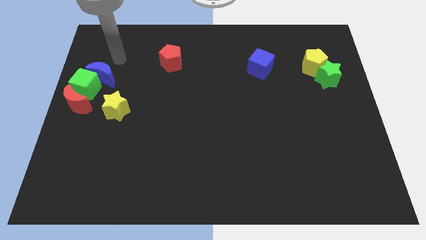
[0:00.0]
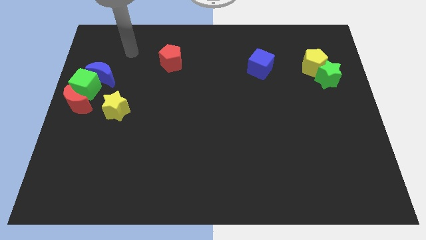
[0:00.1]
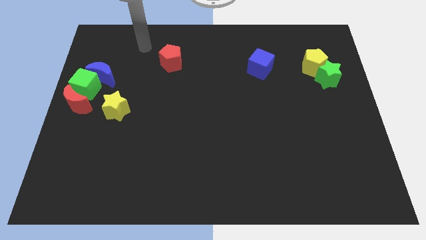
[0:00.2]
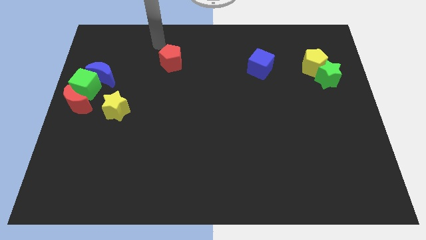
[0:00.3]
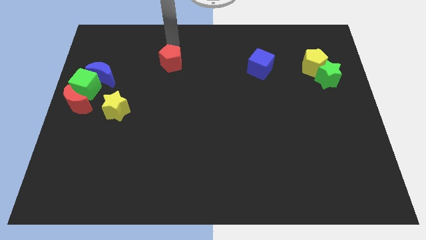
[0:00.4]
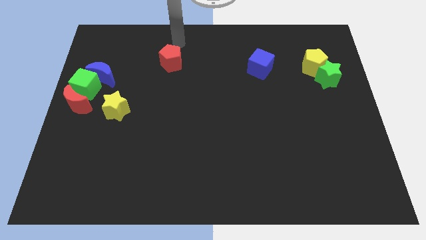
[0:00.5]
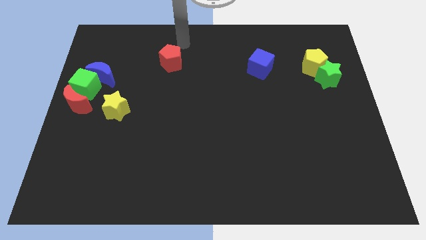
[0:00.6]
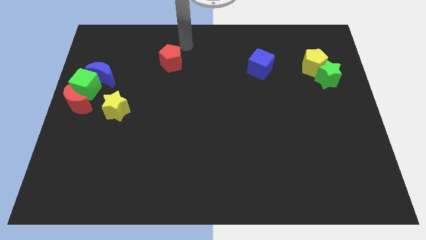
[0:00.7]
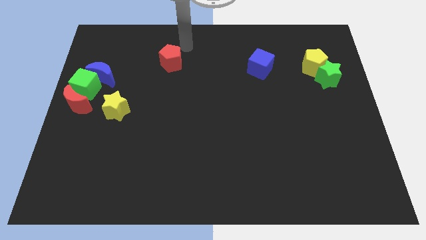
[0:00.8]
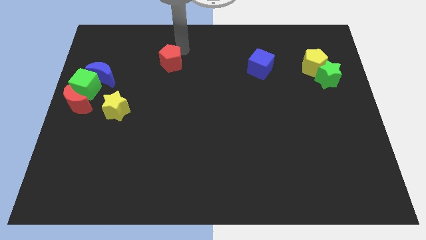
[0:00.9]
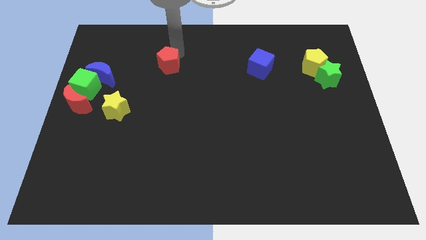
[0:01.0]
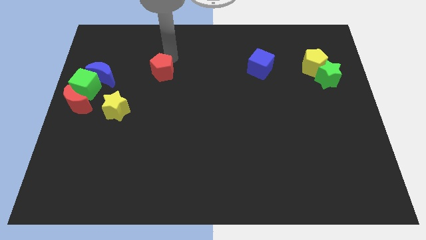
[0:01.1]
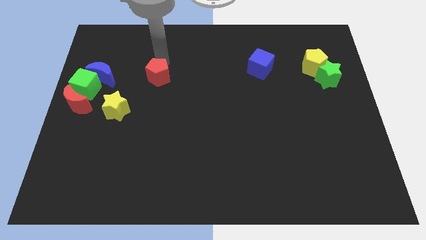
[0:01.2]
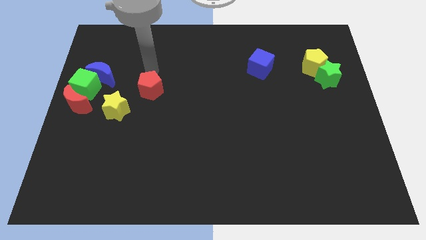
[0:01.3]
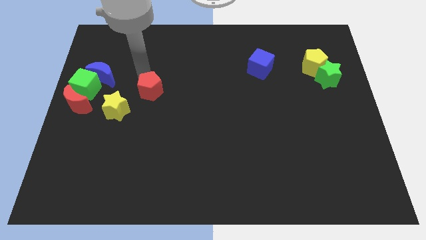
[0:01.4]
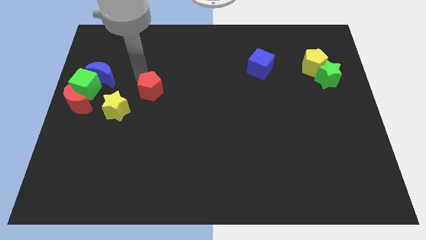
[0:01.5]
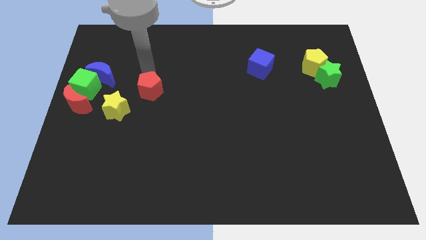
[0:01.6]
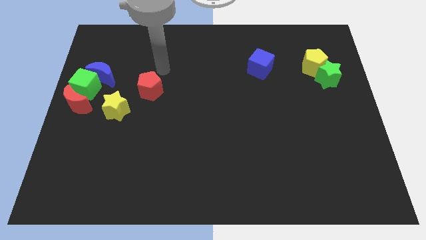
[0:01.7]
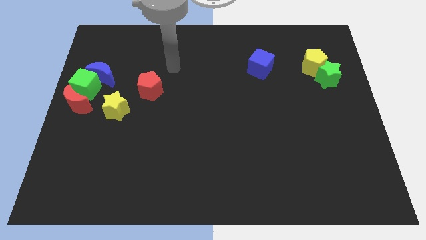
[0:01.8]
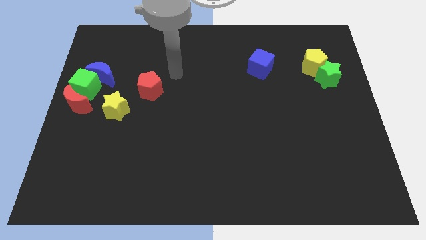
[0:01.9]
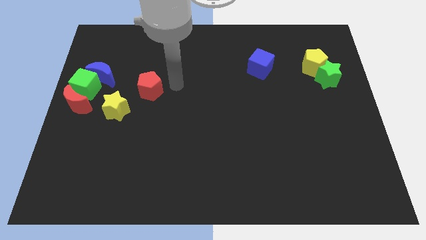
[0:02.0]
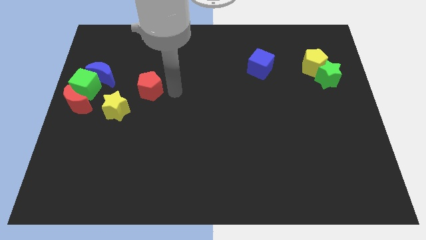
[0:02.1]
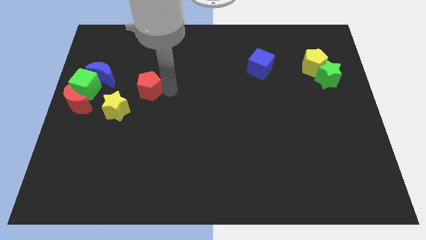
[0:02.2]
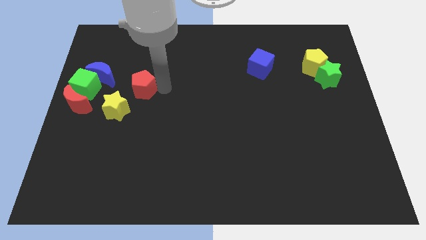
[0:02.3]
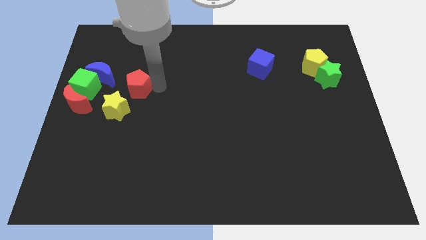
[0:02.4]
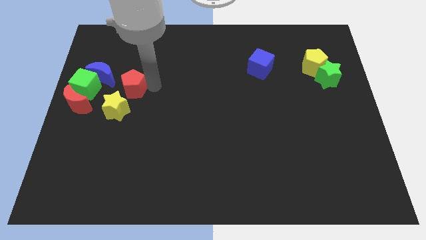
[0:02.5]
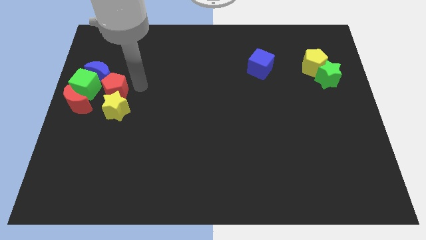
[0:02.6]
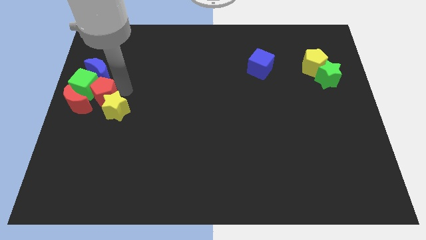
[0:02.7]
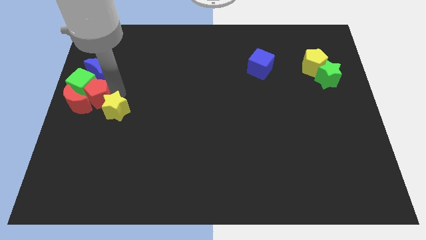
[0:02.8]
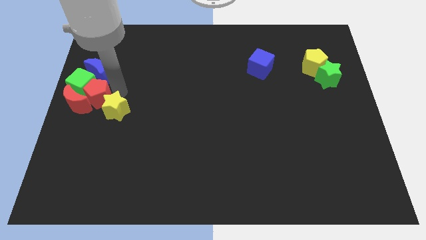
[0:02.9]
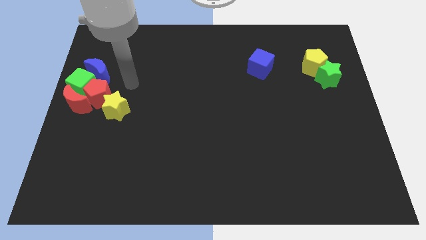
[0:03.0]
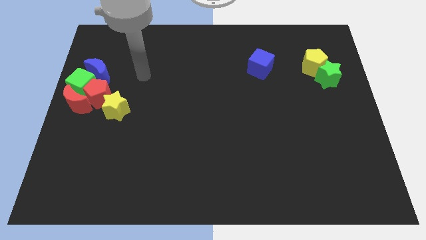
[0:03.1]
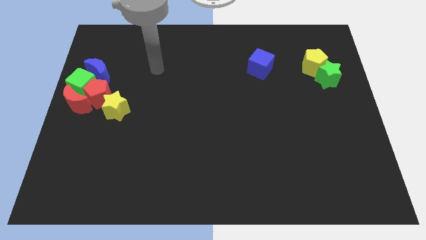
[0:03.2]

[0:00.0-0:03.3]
place the red pentagon at the top left side of yellow star

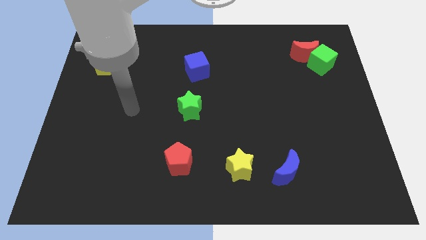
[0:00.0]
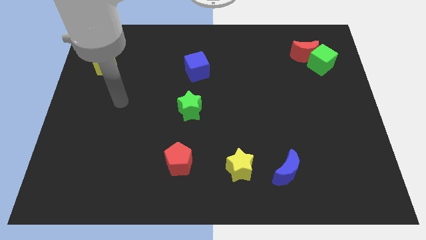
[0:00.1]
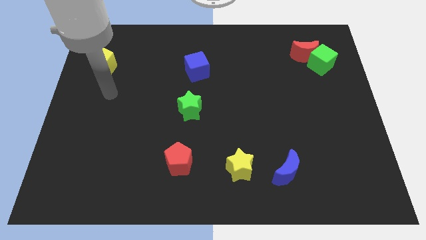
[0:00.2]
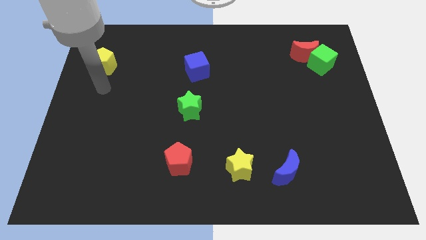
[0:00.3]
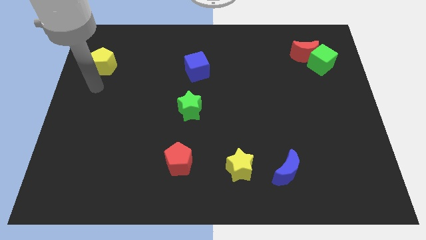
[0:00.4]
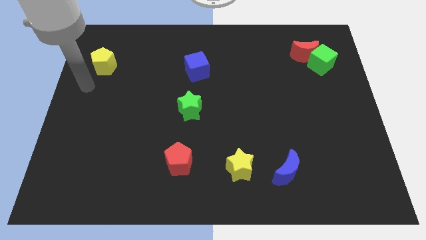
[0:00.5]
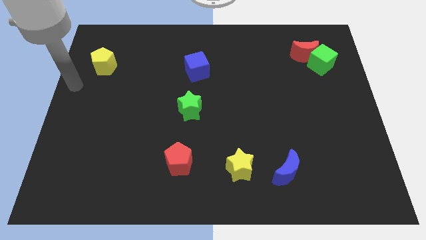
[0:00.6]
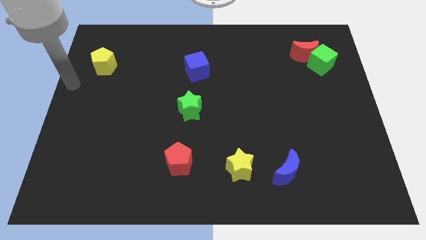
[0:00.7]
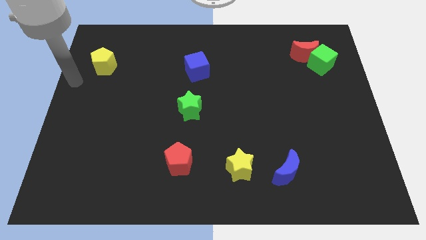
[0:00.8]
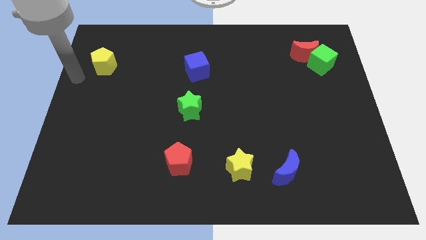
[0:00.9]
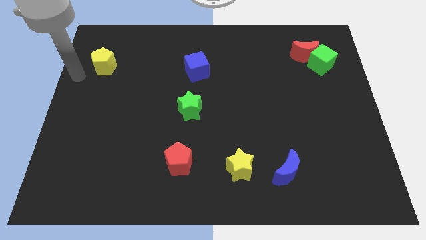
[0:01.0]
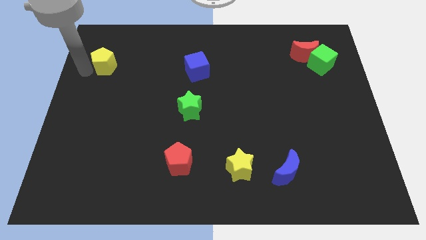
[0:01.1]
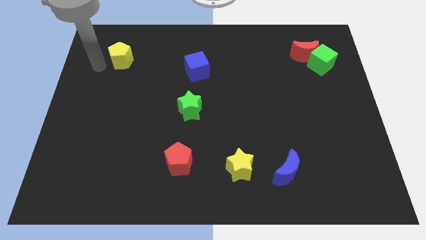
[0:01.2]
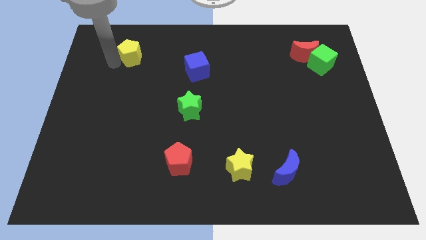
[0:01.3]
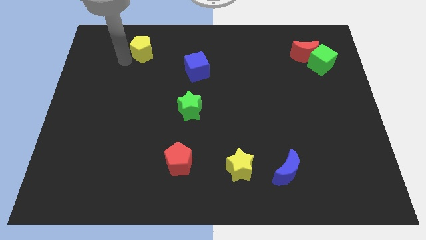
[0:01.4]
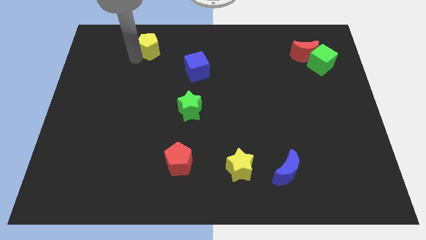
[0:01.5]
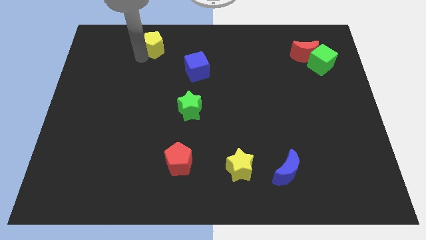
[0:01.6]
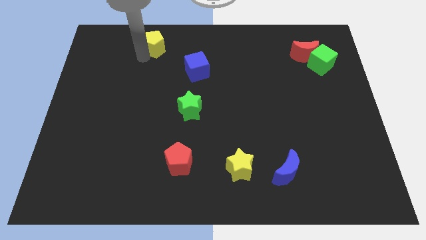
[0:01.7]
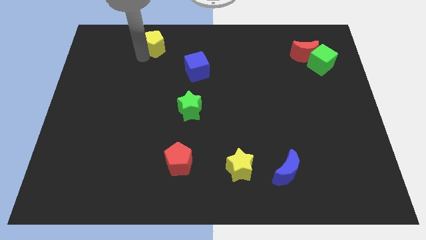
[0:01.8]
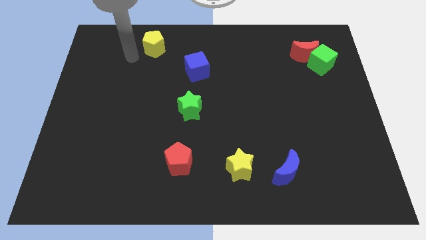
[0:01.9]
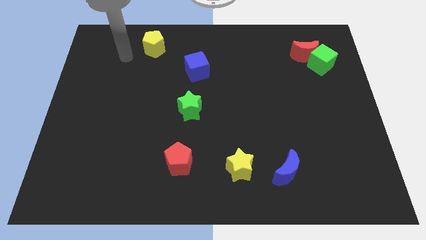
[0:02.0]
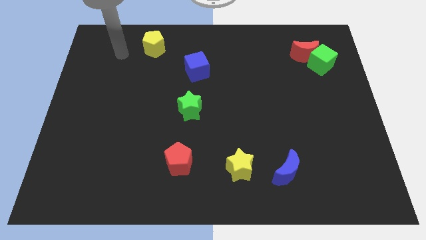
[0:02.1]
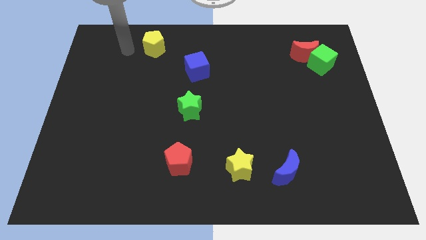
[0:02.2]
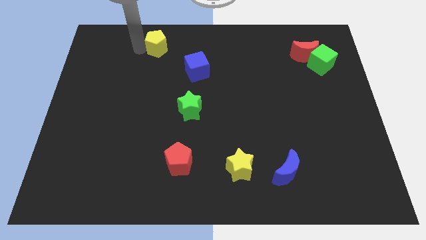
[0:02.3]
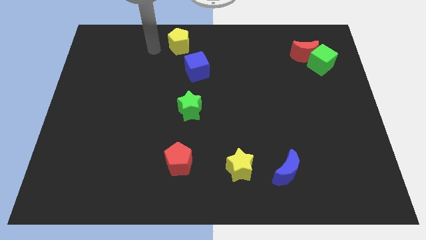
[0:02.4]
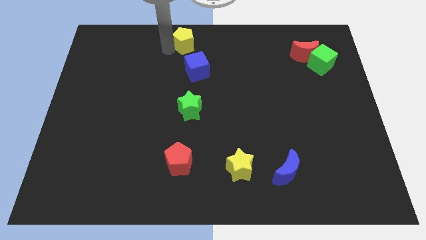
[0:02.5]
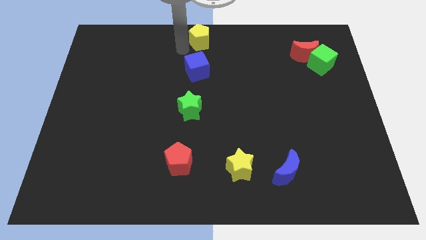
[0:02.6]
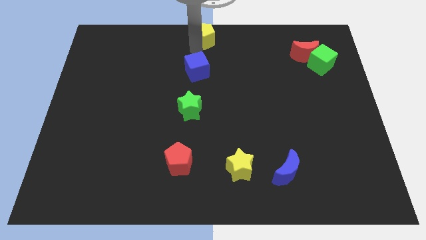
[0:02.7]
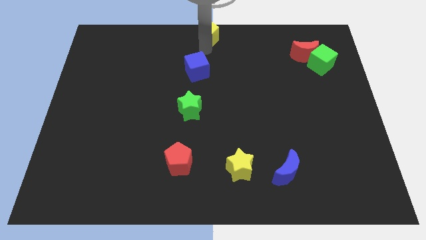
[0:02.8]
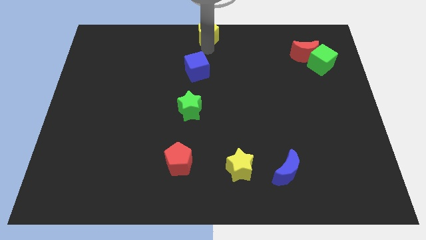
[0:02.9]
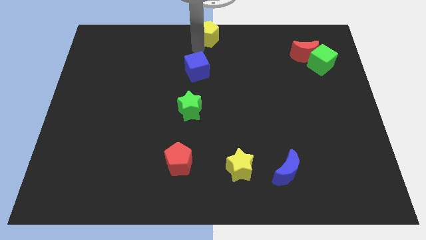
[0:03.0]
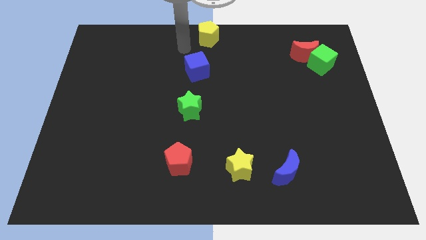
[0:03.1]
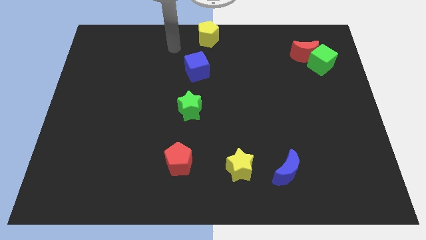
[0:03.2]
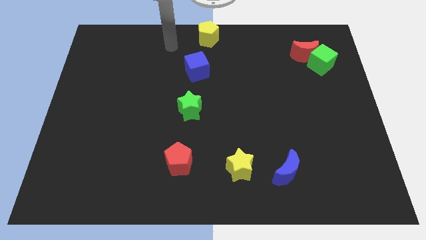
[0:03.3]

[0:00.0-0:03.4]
place the yellow pentagon above the blue cube

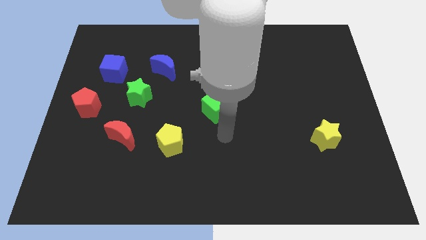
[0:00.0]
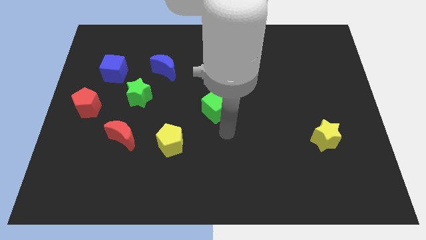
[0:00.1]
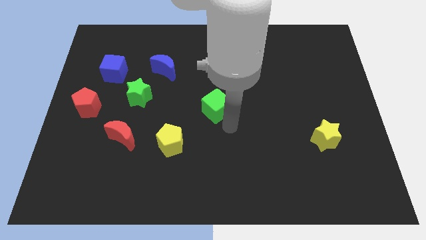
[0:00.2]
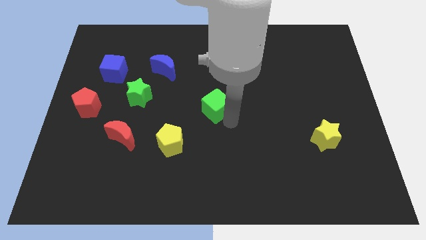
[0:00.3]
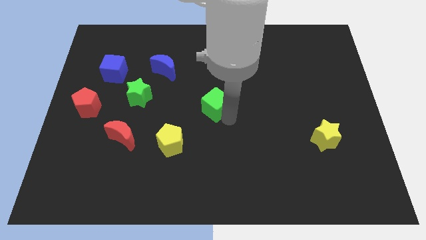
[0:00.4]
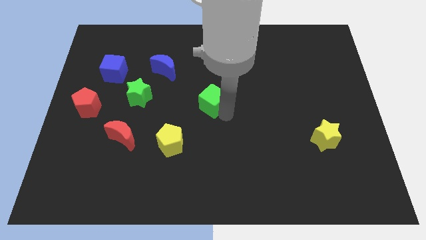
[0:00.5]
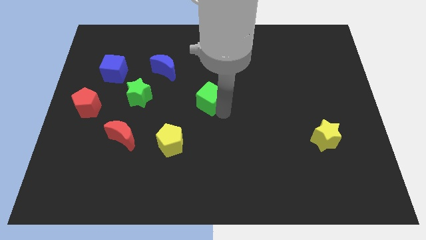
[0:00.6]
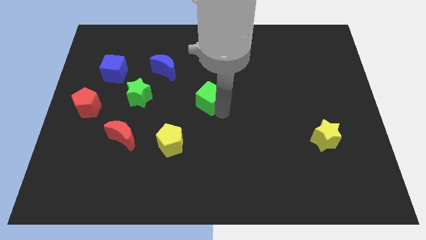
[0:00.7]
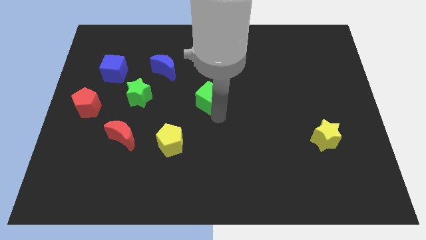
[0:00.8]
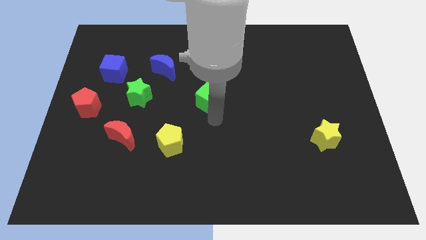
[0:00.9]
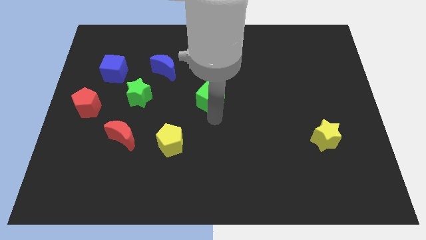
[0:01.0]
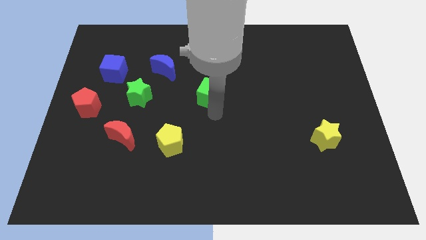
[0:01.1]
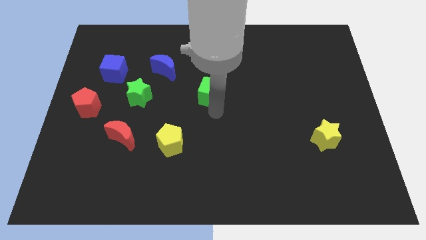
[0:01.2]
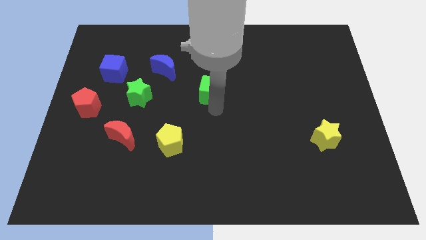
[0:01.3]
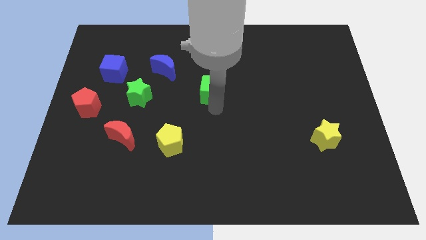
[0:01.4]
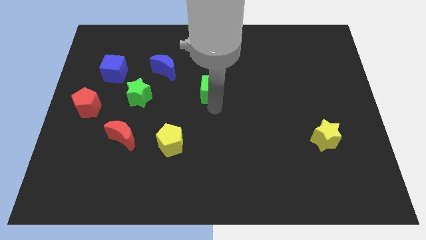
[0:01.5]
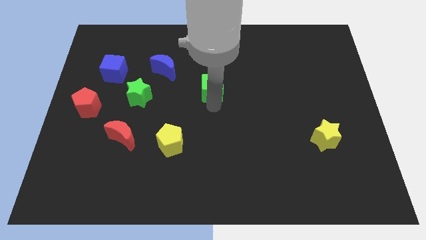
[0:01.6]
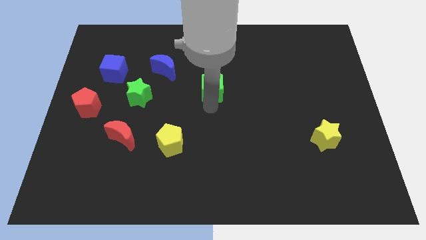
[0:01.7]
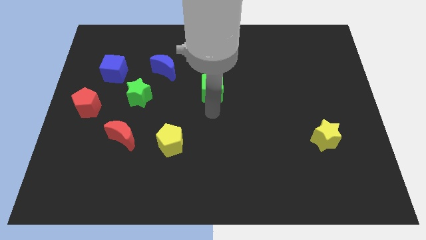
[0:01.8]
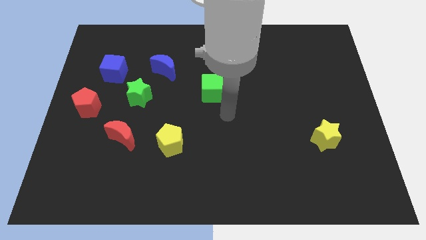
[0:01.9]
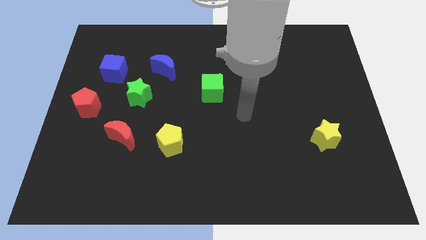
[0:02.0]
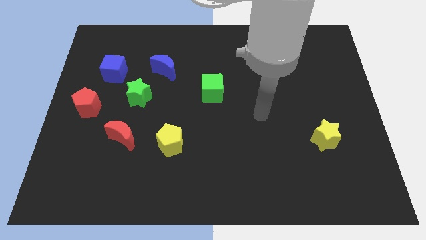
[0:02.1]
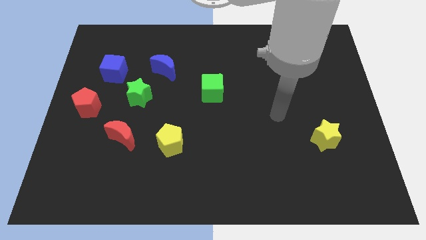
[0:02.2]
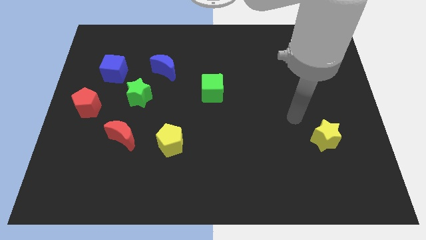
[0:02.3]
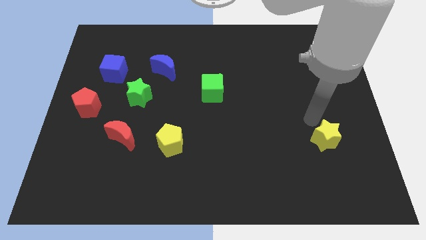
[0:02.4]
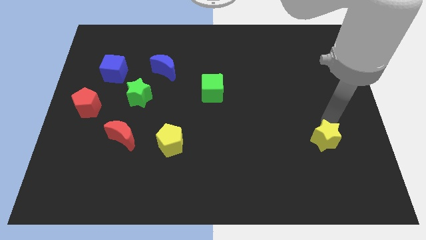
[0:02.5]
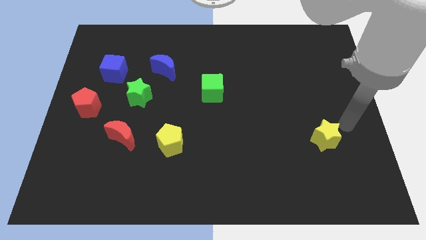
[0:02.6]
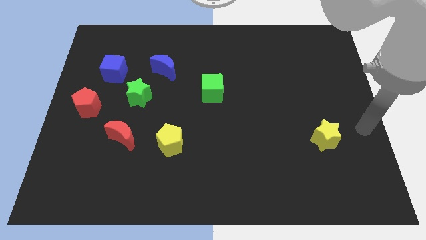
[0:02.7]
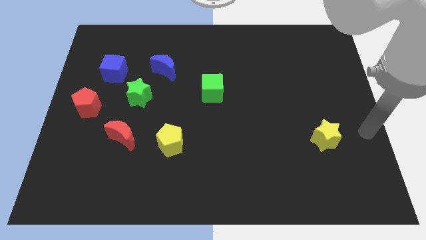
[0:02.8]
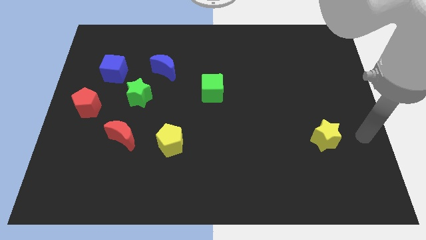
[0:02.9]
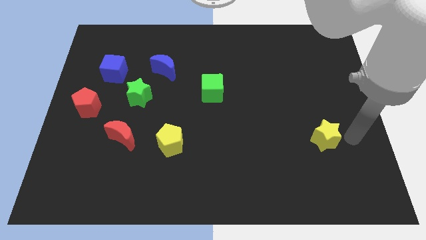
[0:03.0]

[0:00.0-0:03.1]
slightly push the green cube to the top of the board
